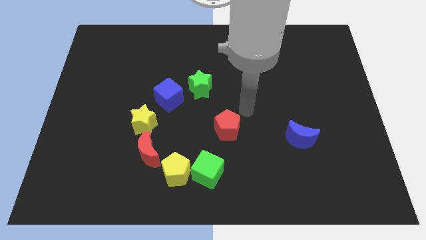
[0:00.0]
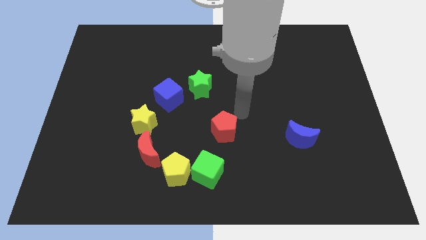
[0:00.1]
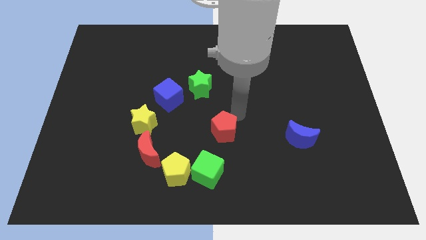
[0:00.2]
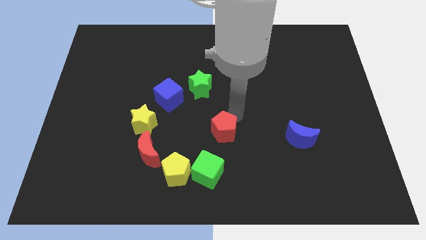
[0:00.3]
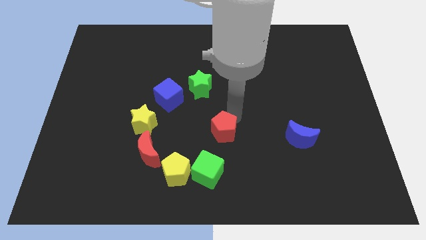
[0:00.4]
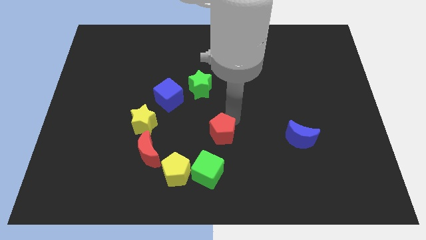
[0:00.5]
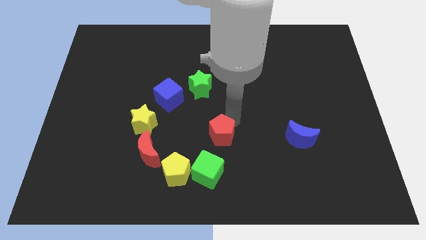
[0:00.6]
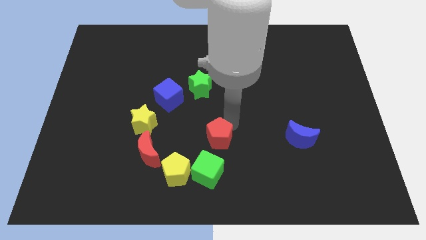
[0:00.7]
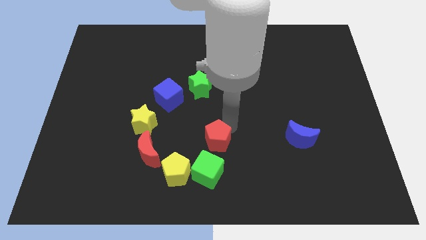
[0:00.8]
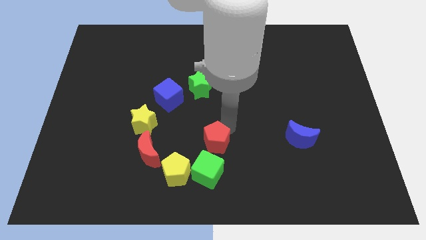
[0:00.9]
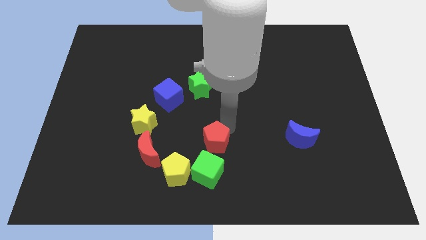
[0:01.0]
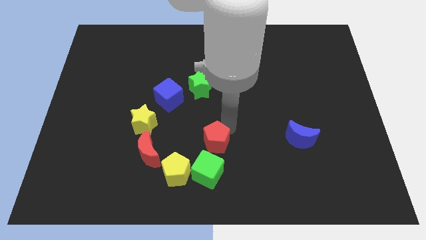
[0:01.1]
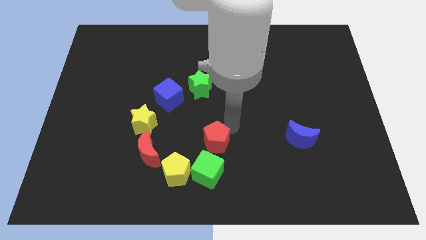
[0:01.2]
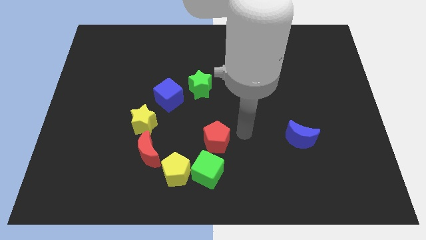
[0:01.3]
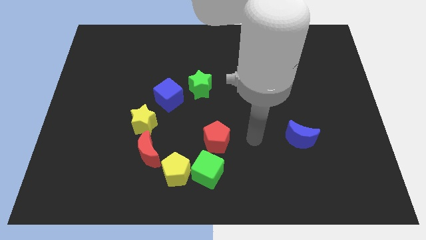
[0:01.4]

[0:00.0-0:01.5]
move the red pentagon towards the green cube

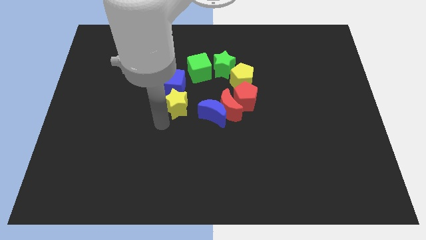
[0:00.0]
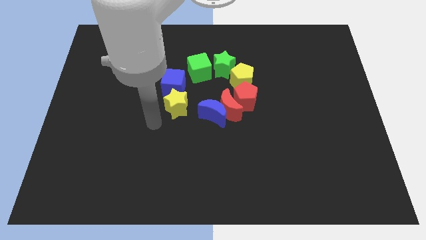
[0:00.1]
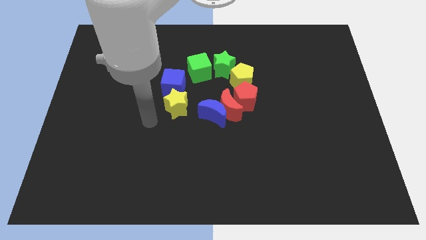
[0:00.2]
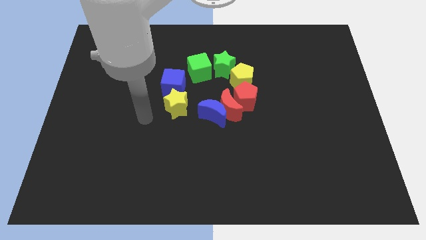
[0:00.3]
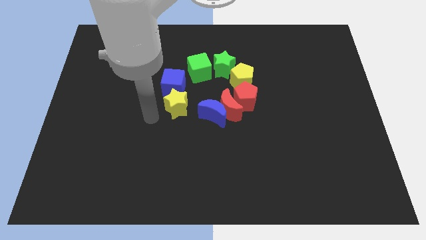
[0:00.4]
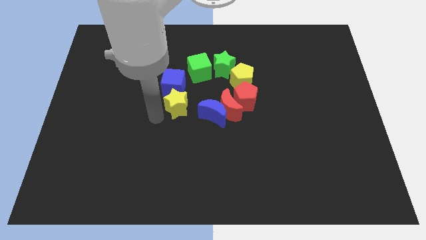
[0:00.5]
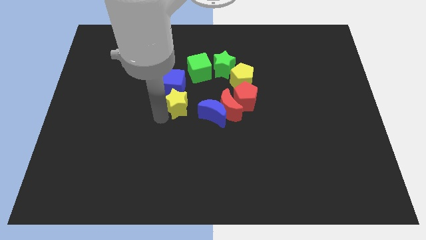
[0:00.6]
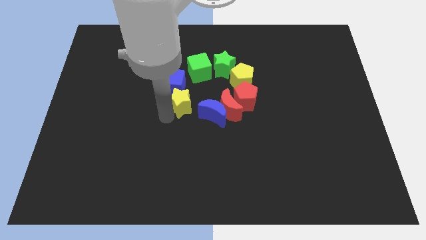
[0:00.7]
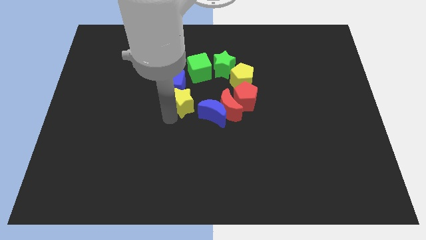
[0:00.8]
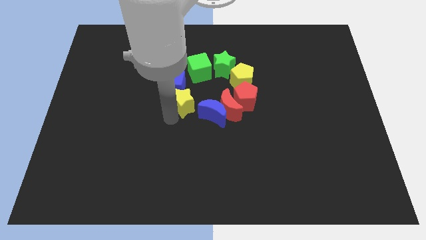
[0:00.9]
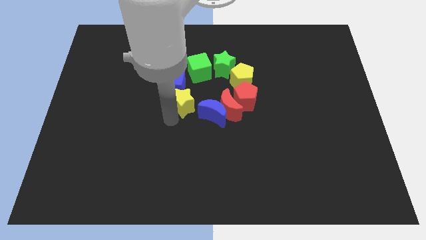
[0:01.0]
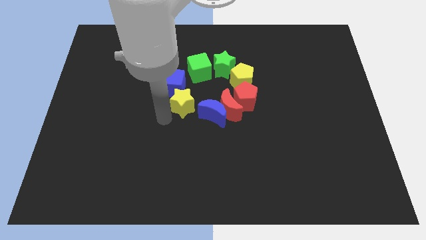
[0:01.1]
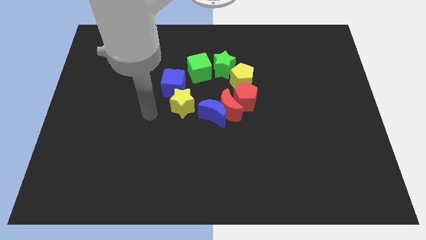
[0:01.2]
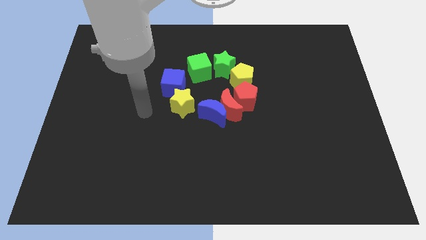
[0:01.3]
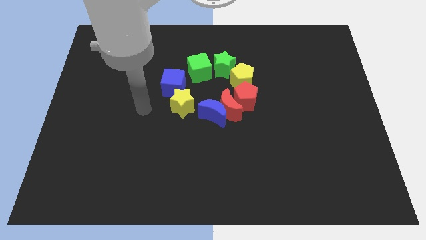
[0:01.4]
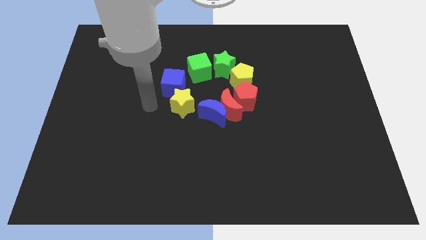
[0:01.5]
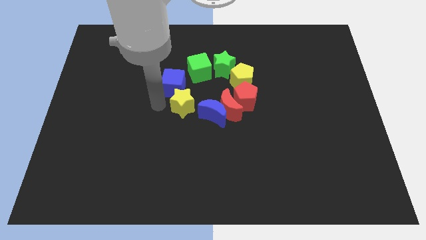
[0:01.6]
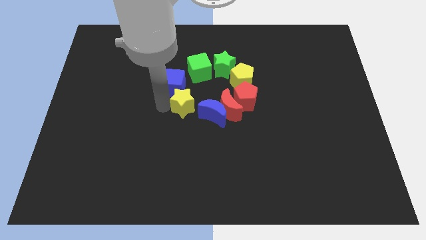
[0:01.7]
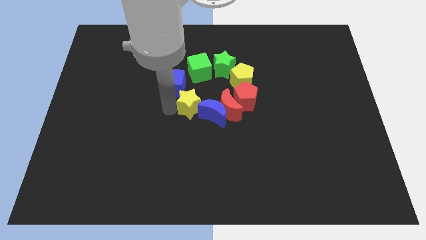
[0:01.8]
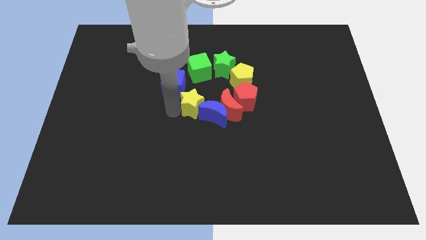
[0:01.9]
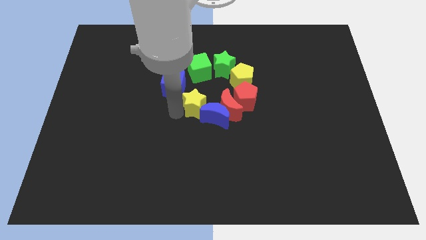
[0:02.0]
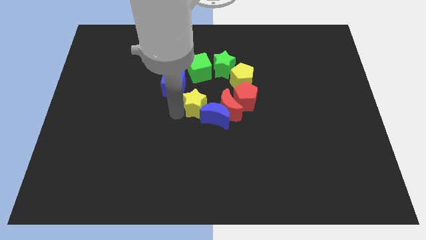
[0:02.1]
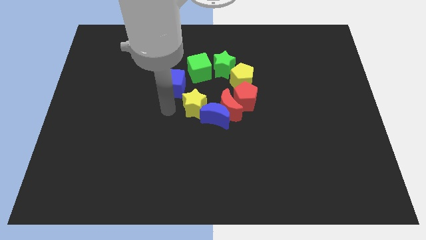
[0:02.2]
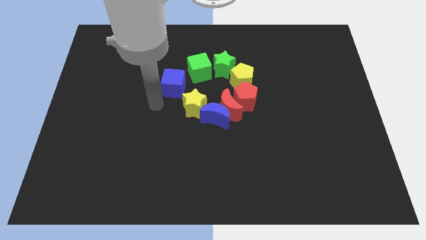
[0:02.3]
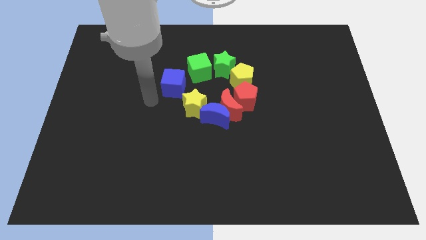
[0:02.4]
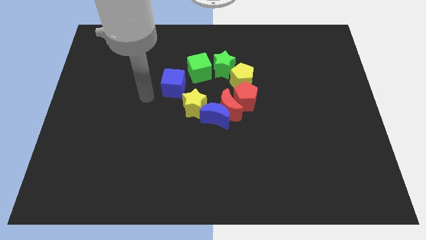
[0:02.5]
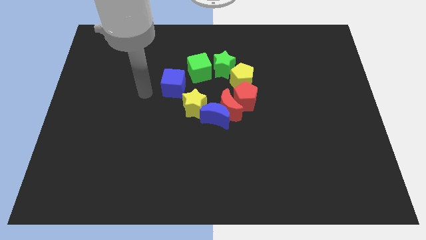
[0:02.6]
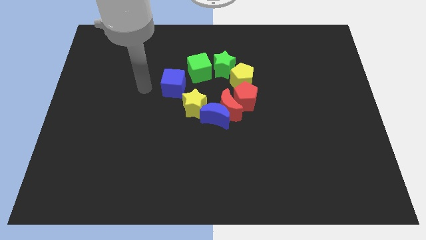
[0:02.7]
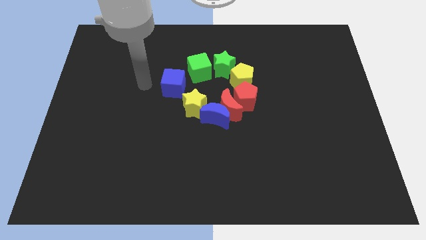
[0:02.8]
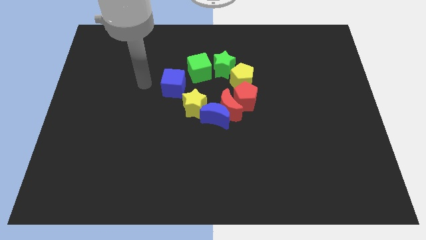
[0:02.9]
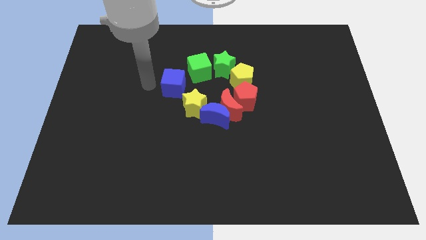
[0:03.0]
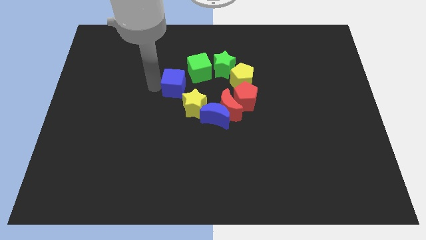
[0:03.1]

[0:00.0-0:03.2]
push the yellow star into the blue crescent

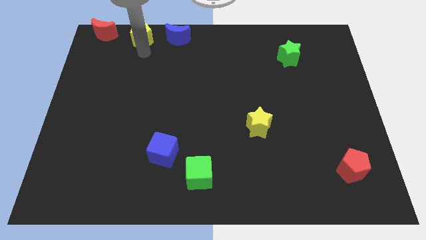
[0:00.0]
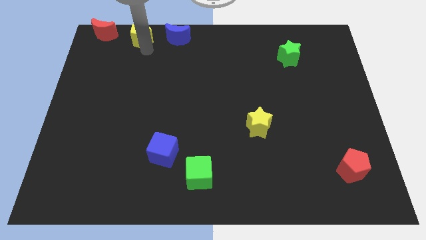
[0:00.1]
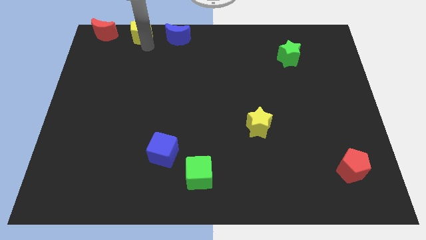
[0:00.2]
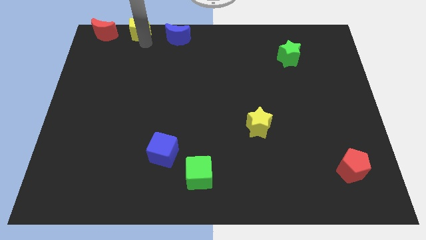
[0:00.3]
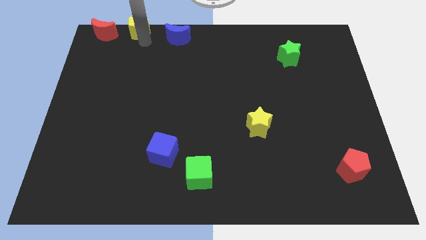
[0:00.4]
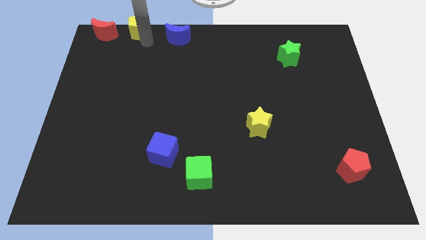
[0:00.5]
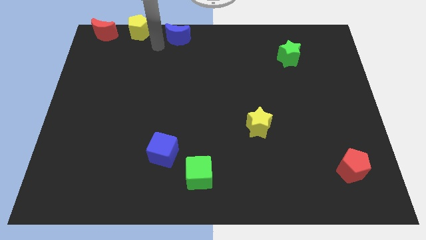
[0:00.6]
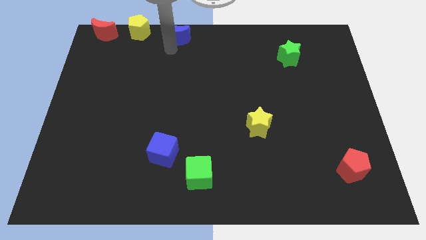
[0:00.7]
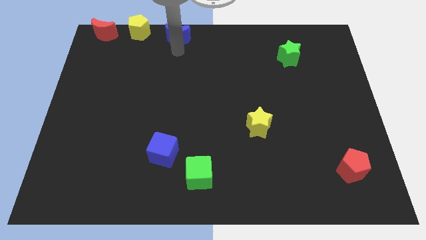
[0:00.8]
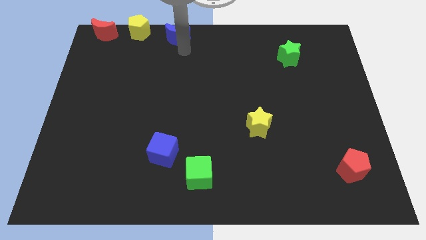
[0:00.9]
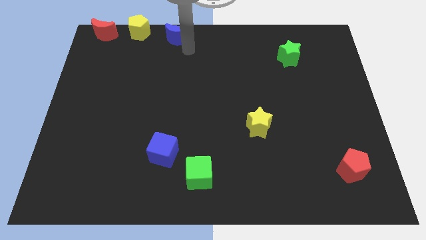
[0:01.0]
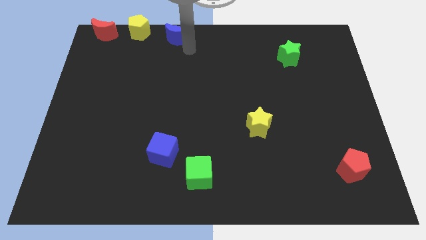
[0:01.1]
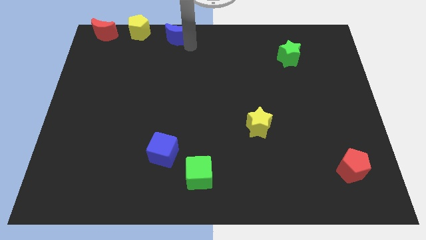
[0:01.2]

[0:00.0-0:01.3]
place the yellow pentagon left of blue crescent

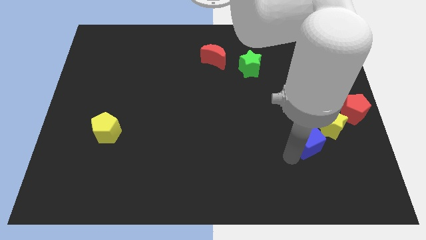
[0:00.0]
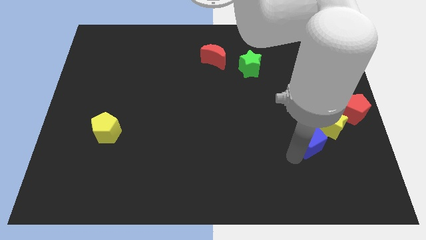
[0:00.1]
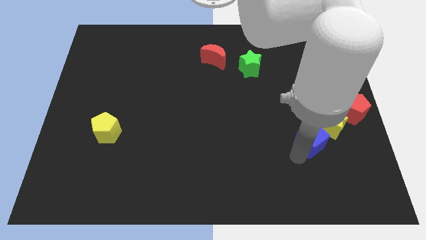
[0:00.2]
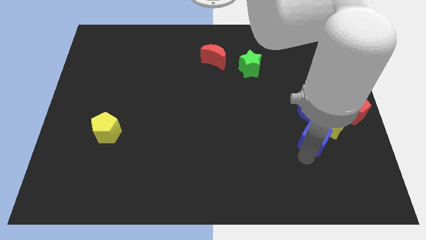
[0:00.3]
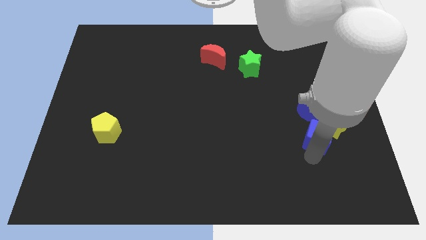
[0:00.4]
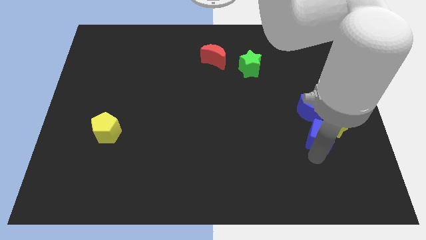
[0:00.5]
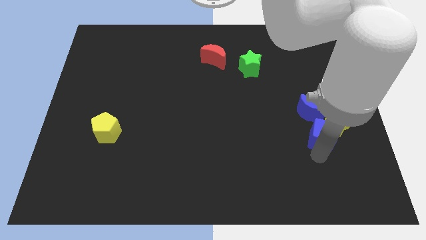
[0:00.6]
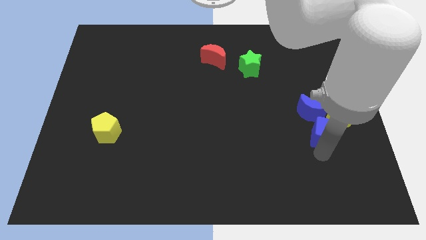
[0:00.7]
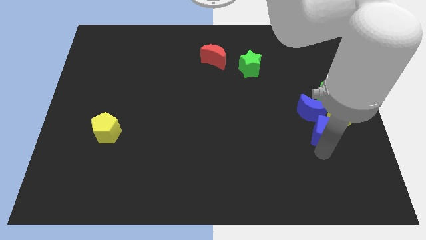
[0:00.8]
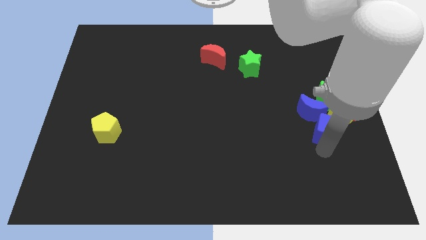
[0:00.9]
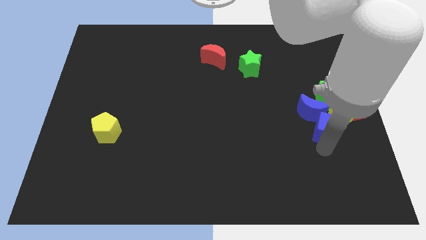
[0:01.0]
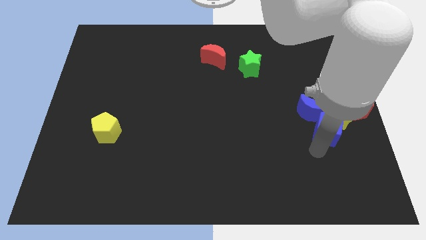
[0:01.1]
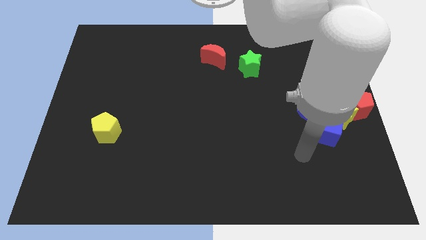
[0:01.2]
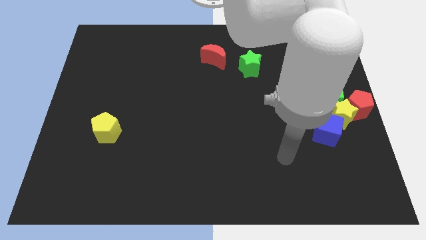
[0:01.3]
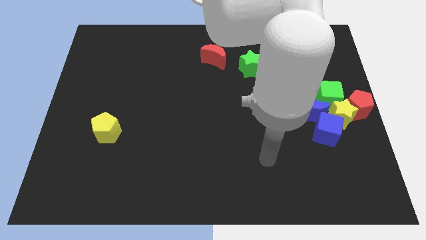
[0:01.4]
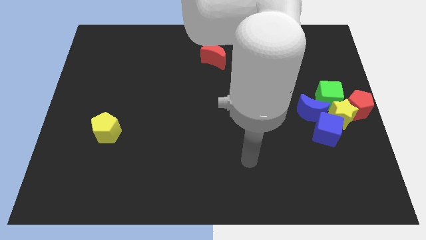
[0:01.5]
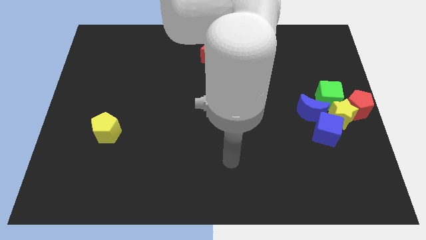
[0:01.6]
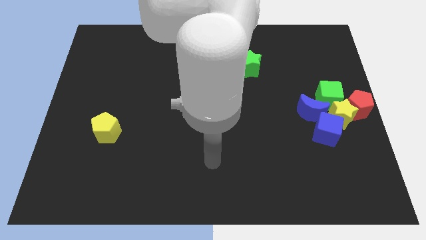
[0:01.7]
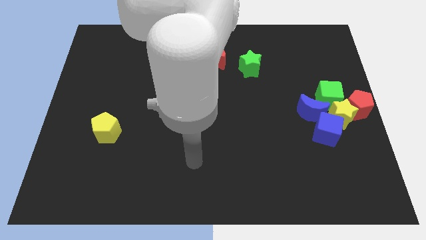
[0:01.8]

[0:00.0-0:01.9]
move the blue cube into the yellow star

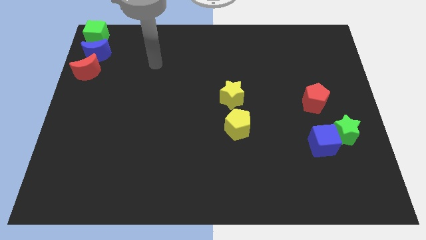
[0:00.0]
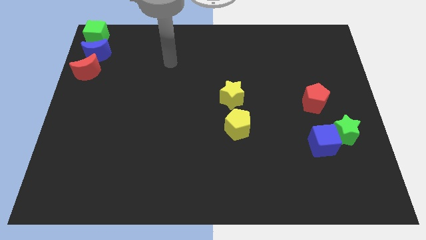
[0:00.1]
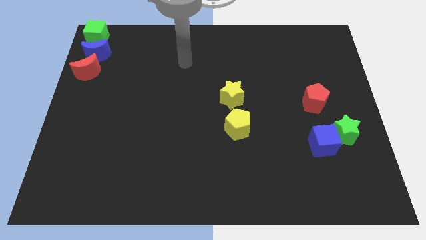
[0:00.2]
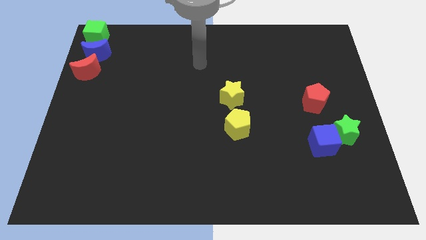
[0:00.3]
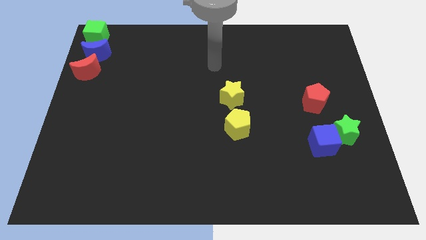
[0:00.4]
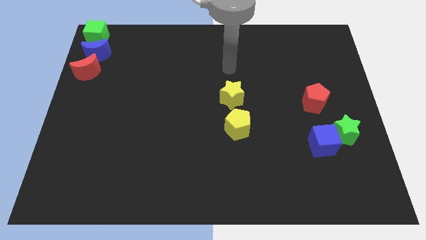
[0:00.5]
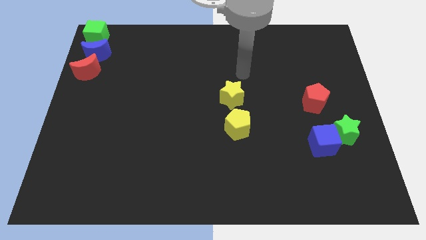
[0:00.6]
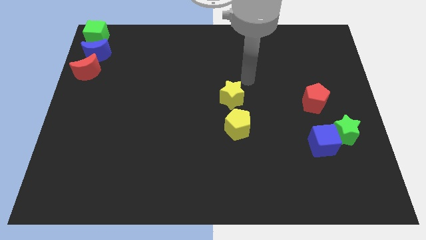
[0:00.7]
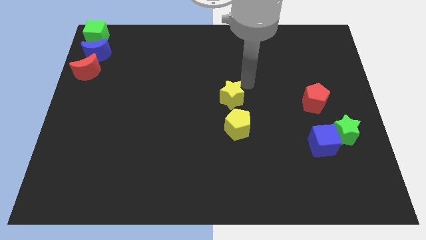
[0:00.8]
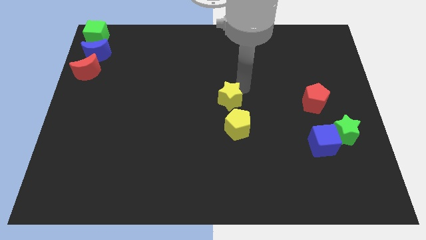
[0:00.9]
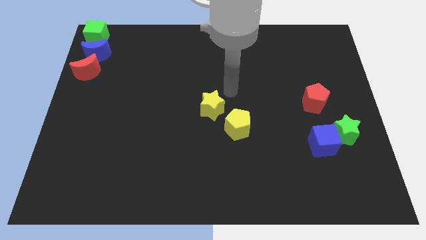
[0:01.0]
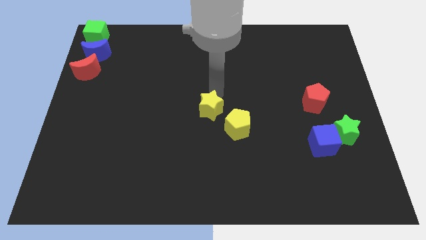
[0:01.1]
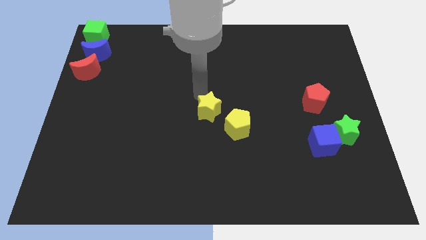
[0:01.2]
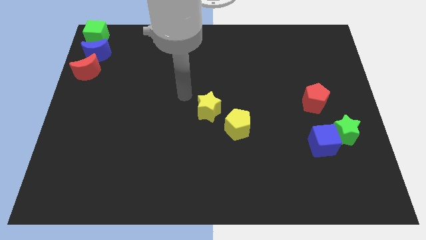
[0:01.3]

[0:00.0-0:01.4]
slightly move the green star to the left side
